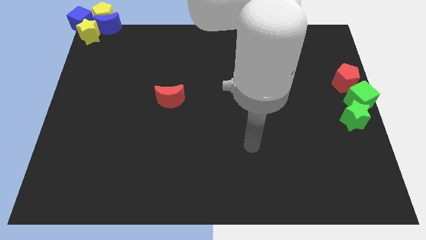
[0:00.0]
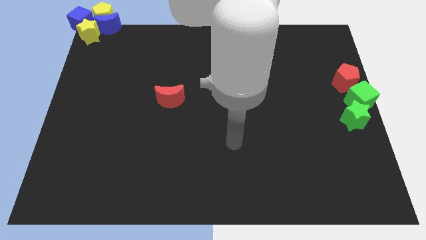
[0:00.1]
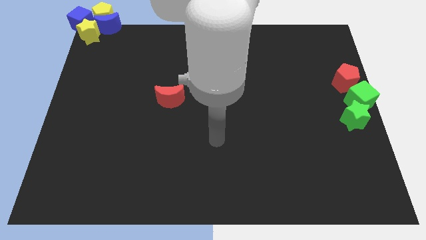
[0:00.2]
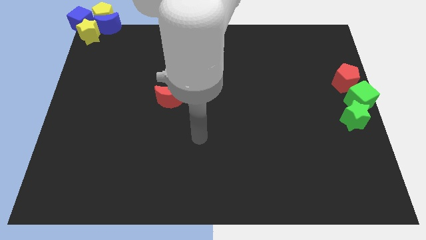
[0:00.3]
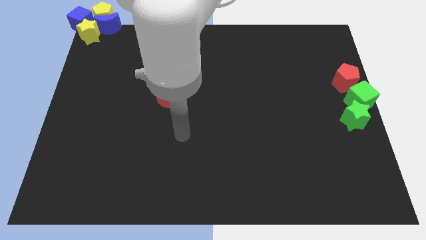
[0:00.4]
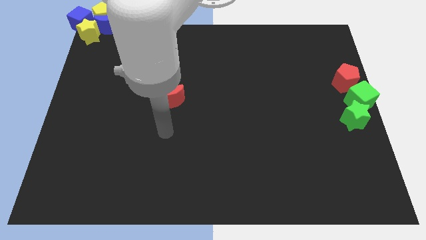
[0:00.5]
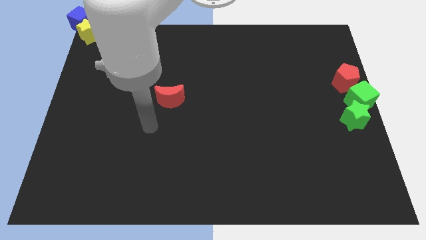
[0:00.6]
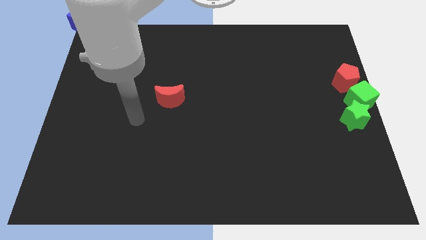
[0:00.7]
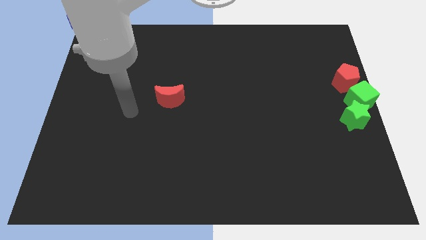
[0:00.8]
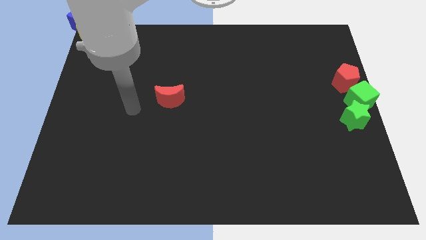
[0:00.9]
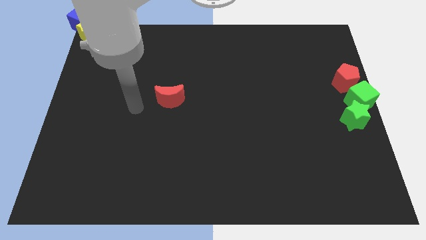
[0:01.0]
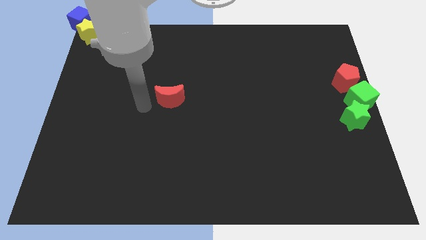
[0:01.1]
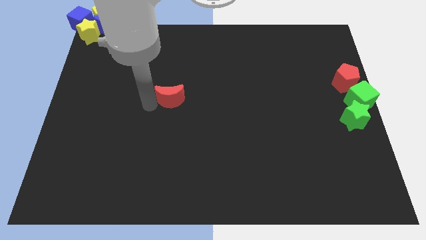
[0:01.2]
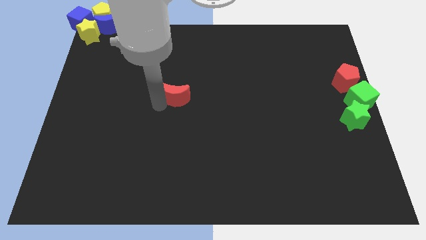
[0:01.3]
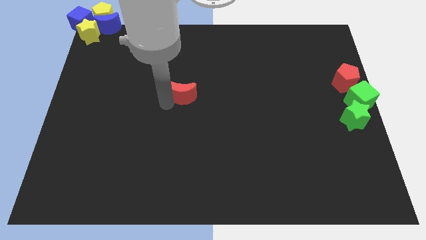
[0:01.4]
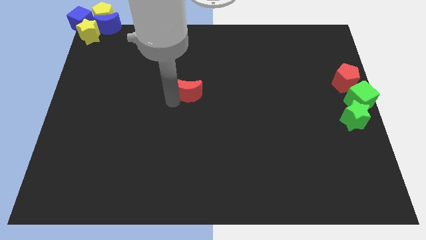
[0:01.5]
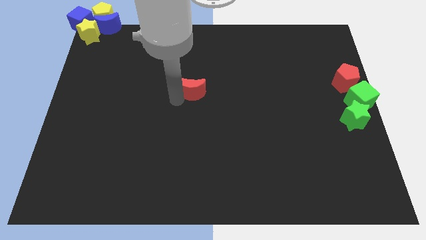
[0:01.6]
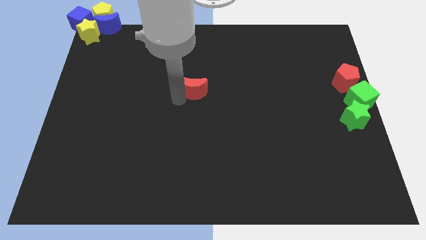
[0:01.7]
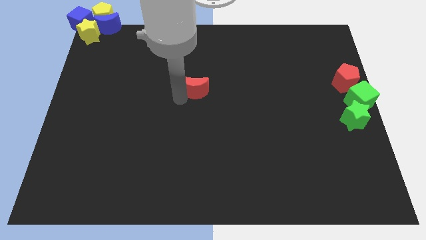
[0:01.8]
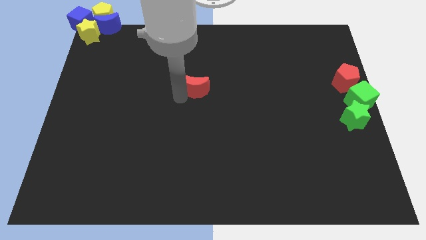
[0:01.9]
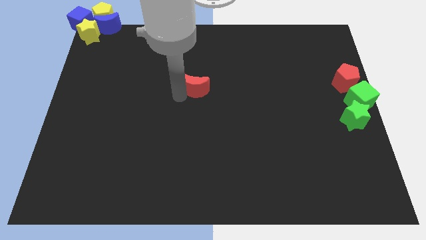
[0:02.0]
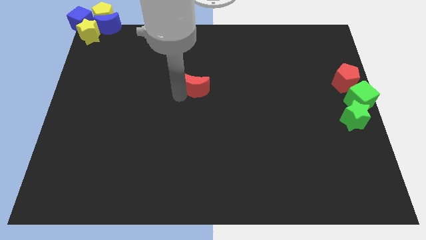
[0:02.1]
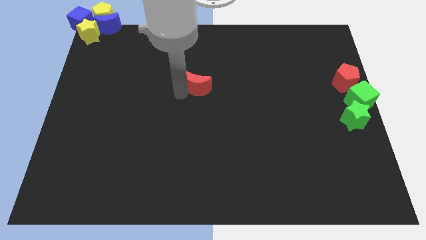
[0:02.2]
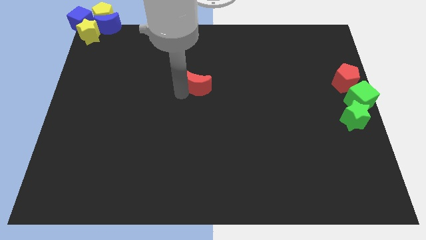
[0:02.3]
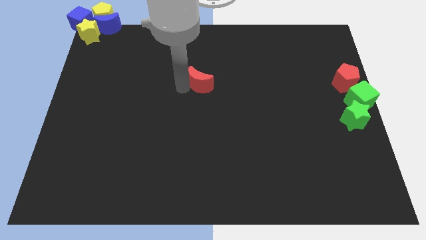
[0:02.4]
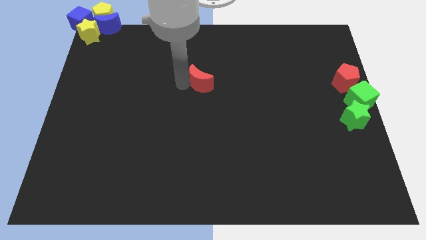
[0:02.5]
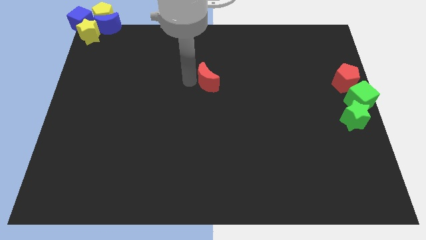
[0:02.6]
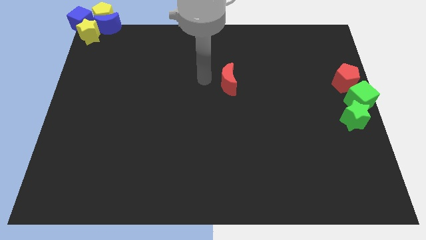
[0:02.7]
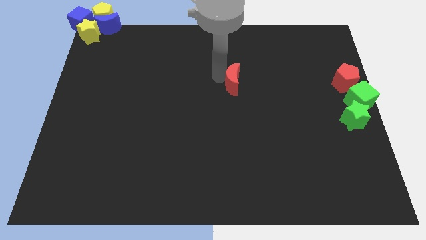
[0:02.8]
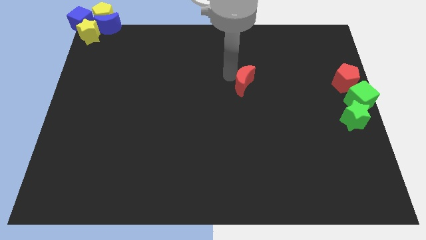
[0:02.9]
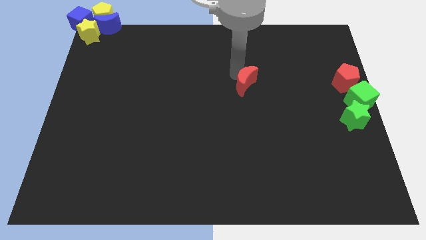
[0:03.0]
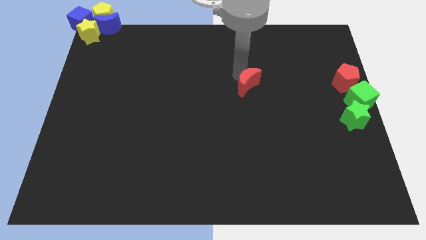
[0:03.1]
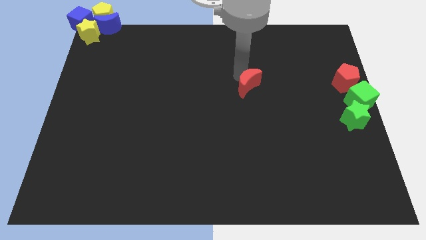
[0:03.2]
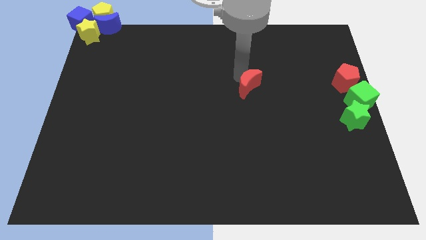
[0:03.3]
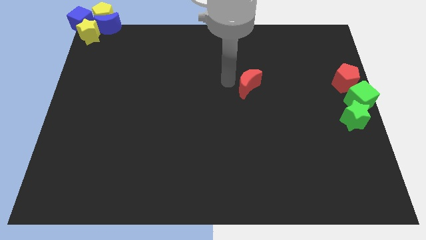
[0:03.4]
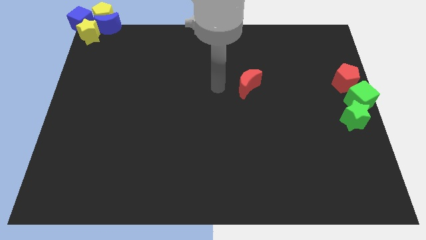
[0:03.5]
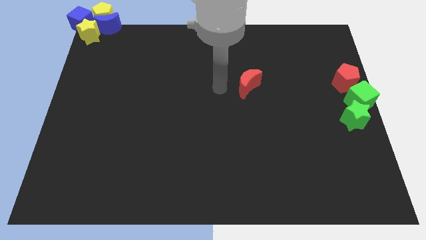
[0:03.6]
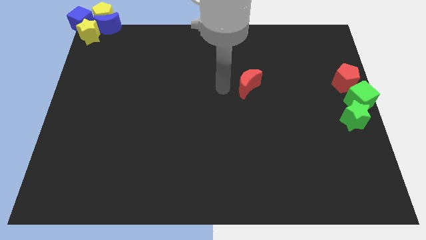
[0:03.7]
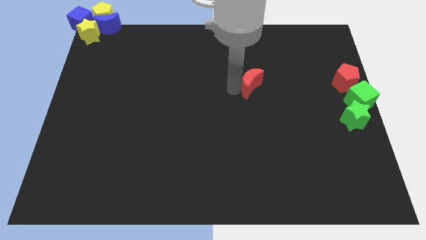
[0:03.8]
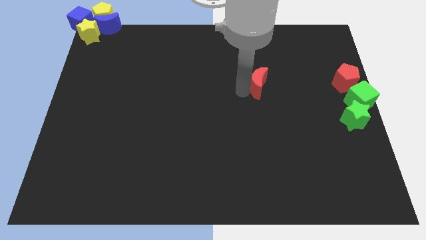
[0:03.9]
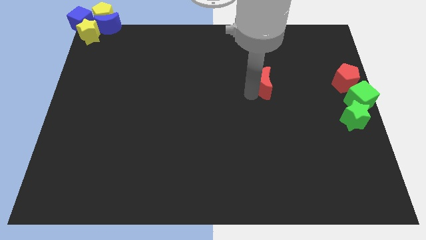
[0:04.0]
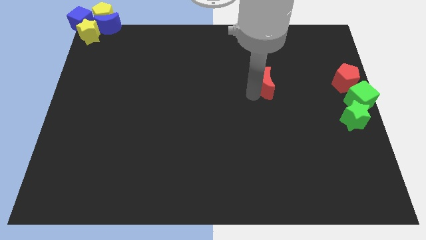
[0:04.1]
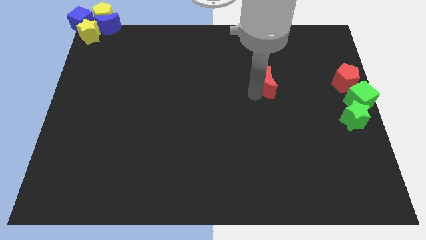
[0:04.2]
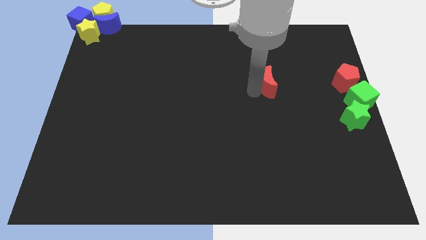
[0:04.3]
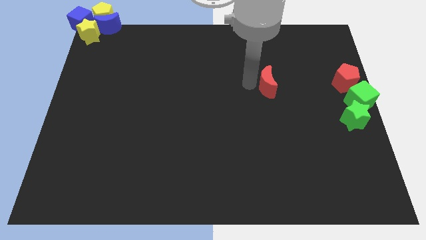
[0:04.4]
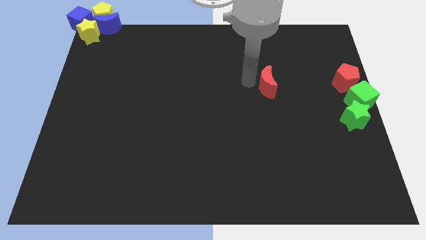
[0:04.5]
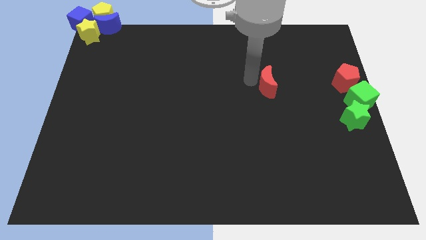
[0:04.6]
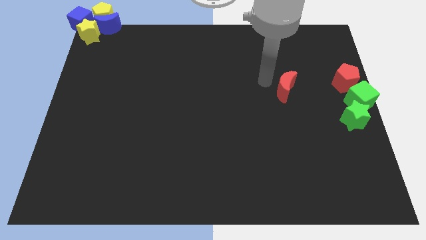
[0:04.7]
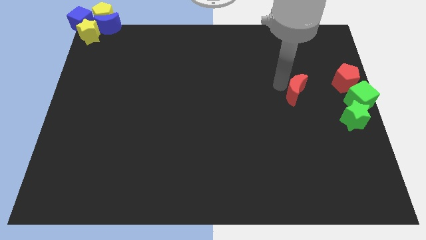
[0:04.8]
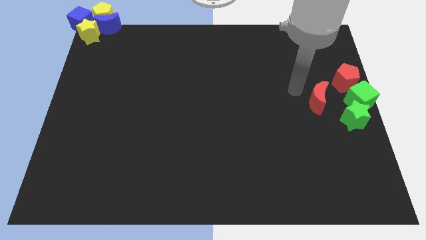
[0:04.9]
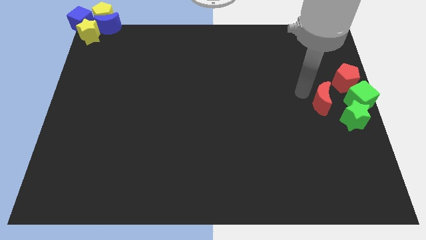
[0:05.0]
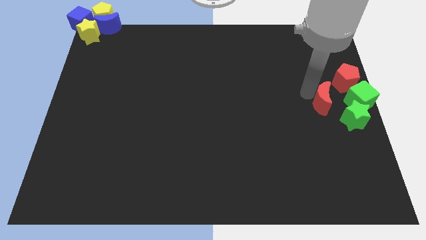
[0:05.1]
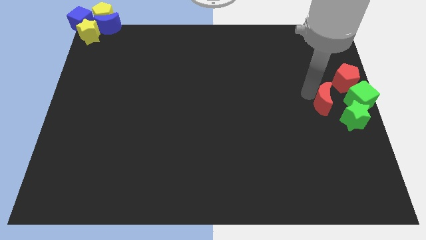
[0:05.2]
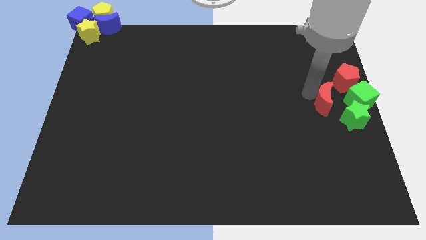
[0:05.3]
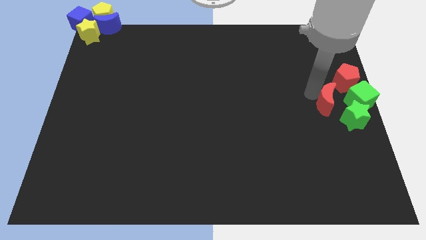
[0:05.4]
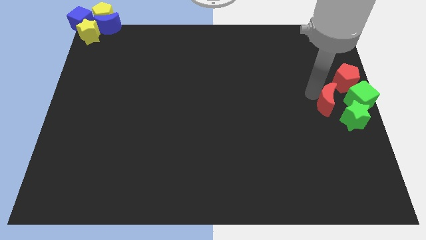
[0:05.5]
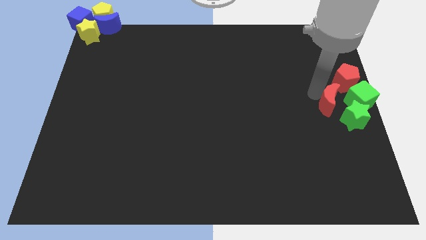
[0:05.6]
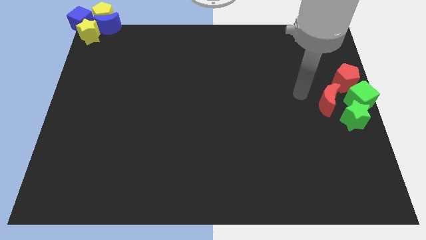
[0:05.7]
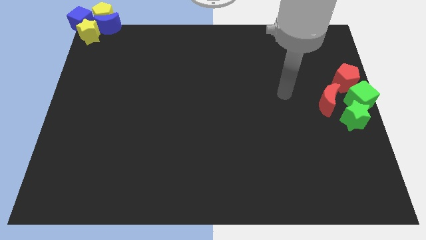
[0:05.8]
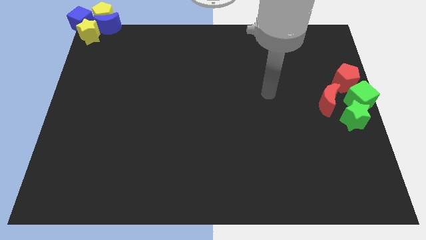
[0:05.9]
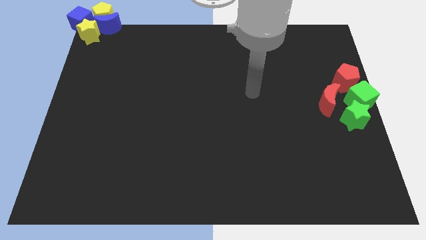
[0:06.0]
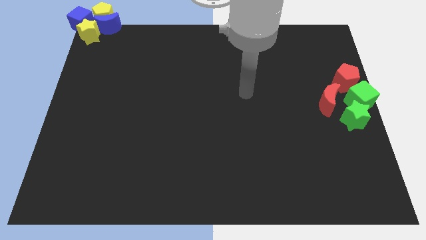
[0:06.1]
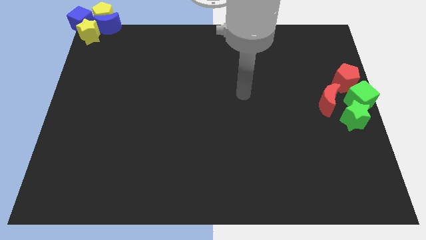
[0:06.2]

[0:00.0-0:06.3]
move red crescent towards the green cube and green star

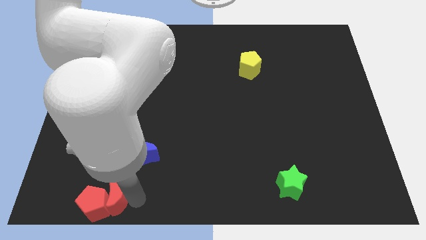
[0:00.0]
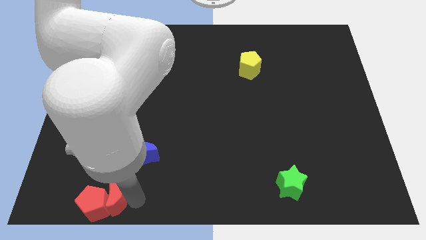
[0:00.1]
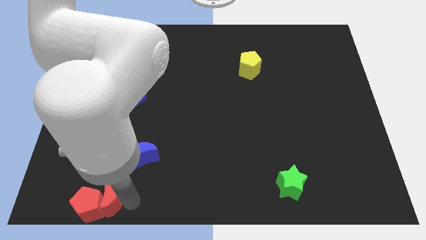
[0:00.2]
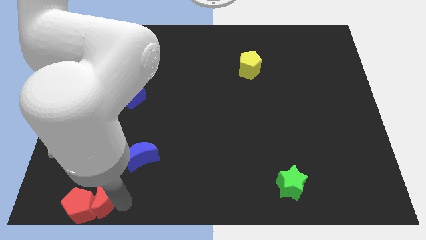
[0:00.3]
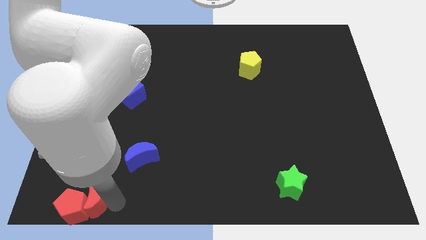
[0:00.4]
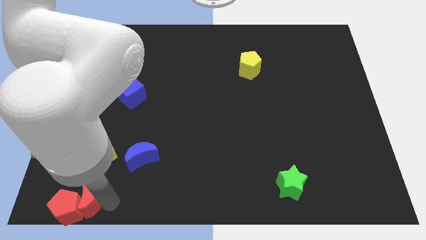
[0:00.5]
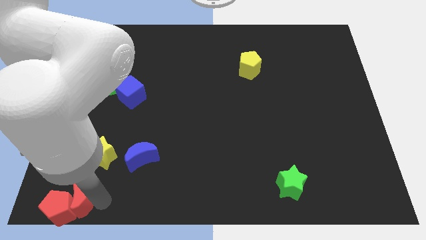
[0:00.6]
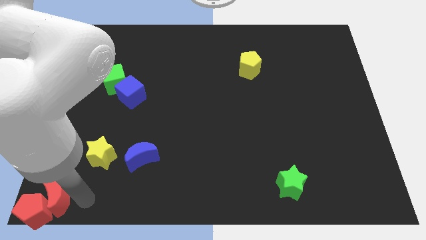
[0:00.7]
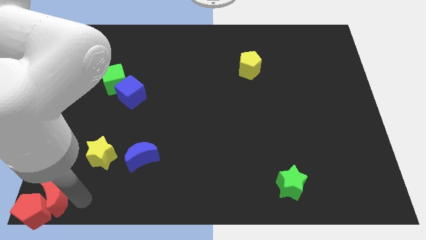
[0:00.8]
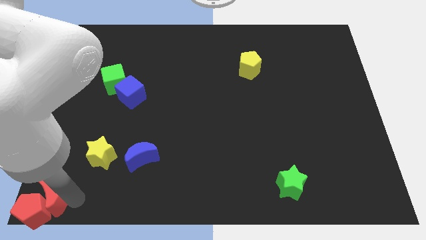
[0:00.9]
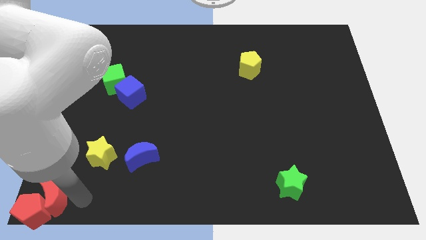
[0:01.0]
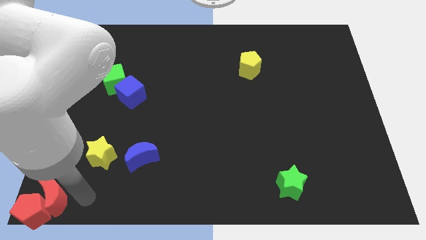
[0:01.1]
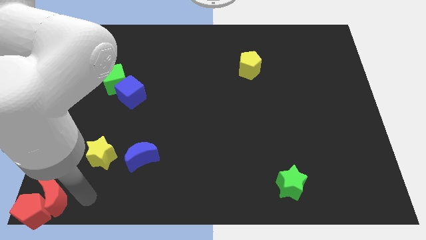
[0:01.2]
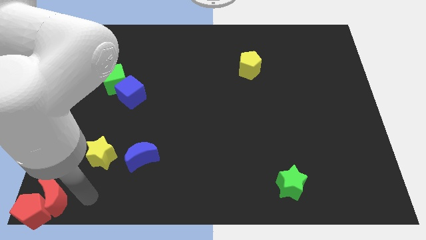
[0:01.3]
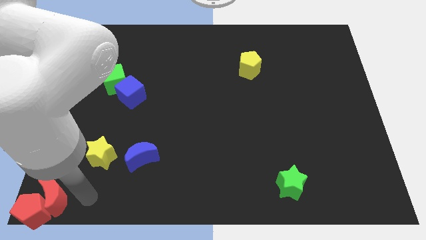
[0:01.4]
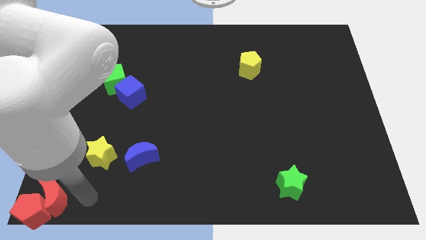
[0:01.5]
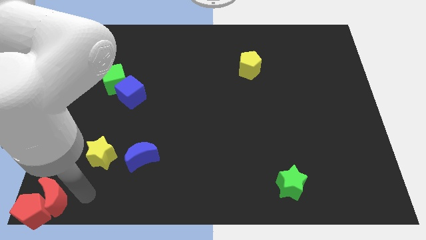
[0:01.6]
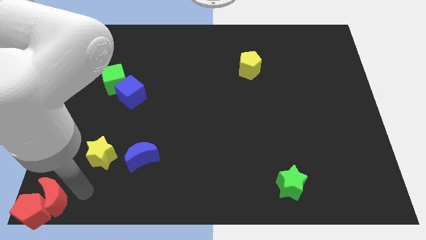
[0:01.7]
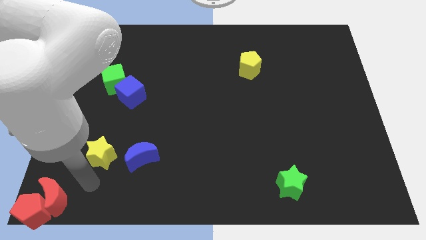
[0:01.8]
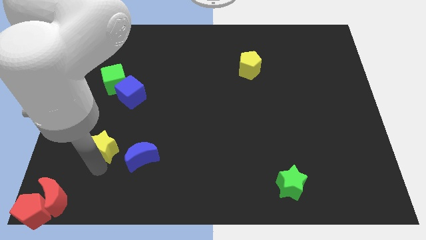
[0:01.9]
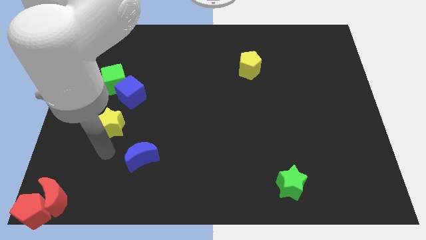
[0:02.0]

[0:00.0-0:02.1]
put the red crescent and the red pentagon at the bottom left corner

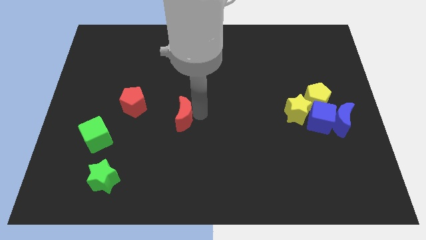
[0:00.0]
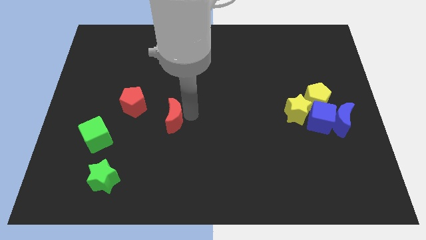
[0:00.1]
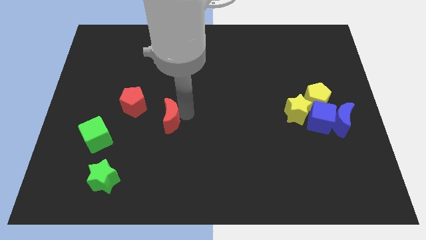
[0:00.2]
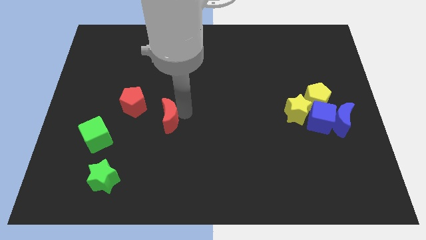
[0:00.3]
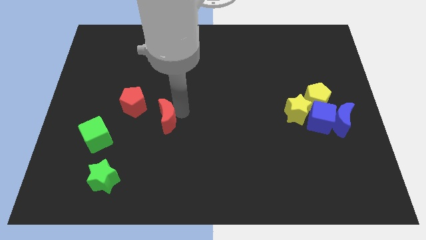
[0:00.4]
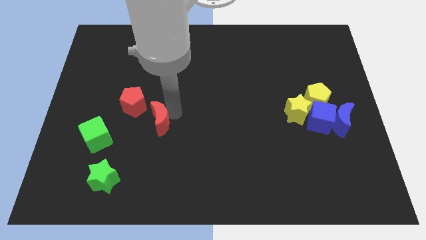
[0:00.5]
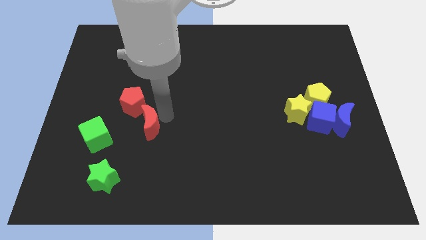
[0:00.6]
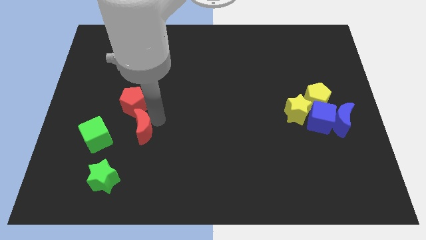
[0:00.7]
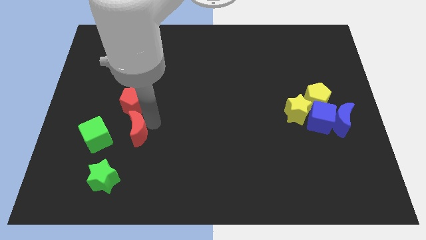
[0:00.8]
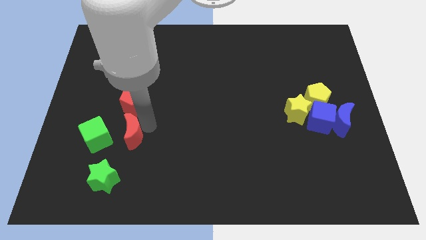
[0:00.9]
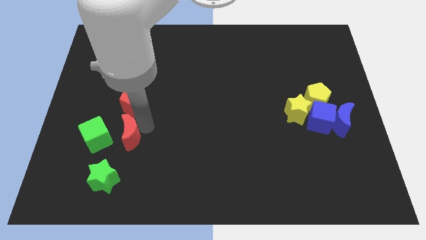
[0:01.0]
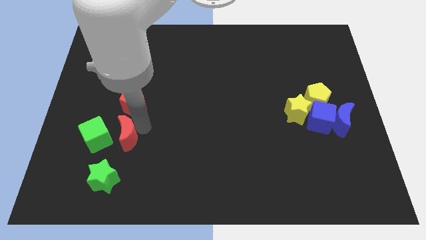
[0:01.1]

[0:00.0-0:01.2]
move the red crescent to the bottom of the red pentagon
